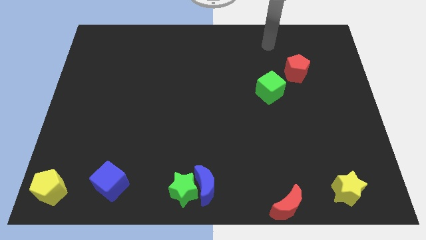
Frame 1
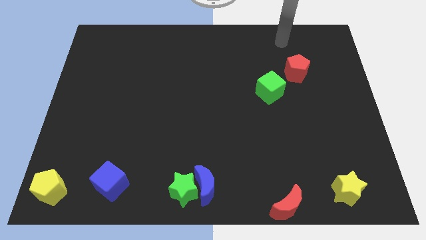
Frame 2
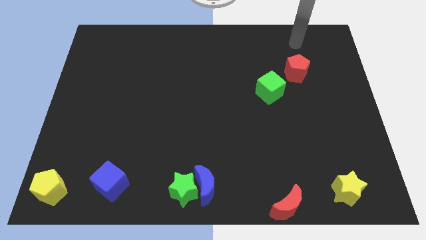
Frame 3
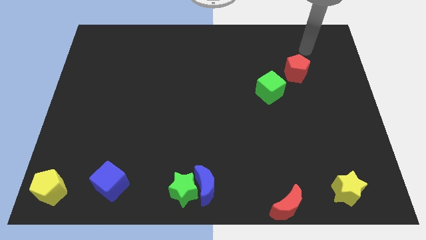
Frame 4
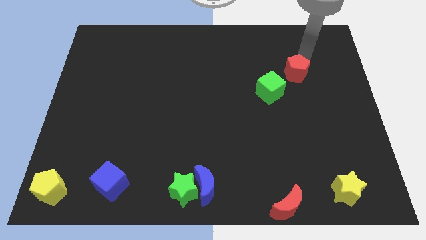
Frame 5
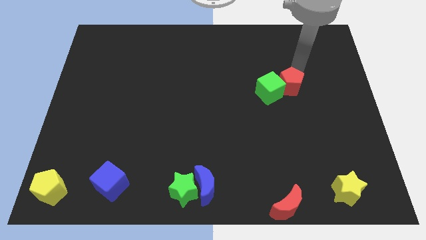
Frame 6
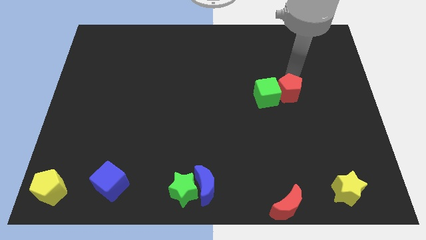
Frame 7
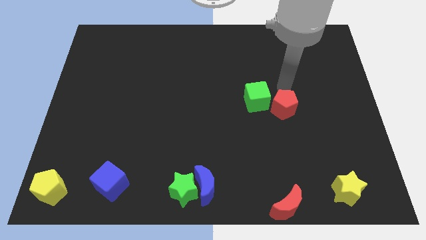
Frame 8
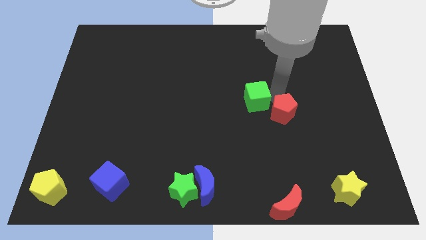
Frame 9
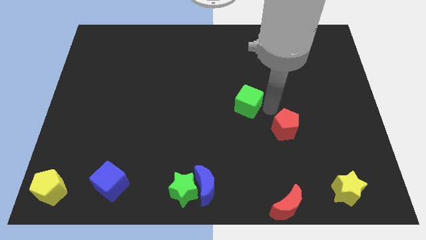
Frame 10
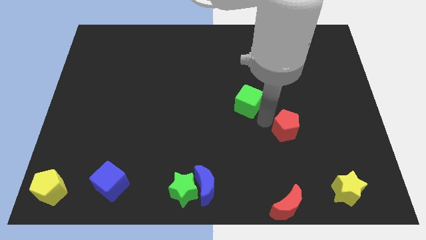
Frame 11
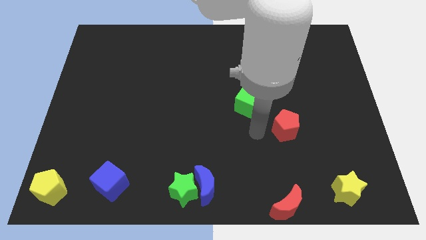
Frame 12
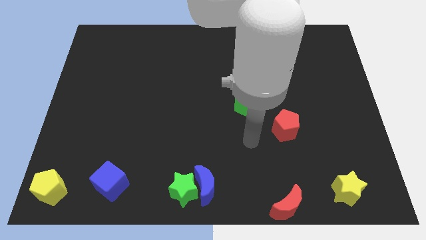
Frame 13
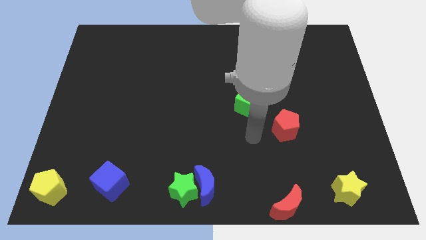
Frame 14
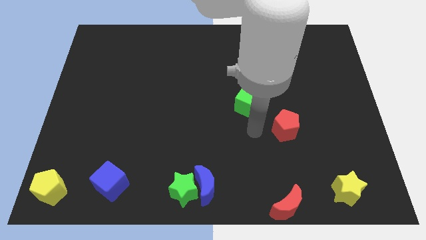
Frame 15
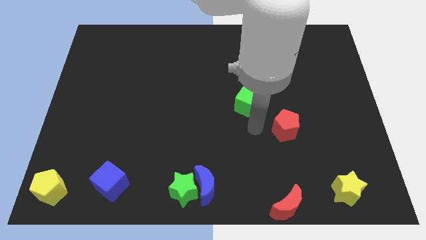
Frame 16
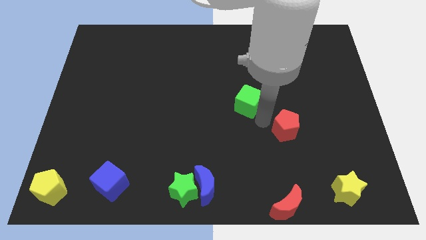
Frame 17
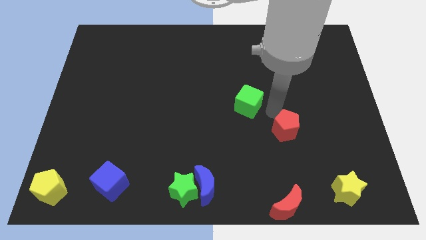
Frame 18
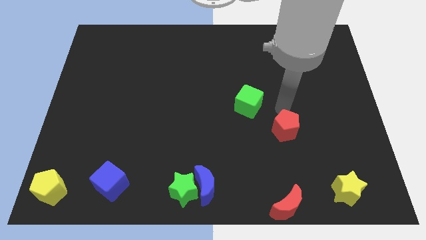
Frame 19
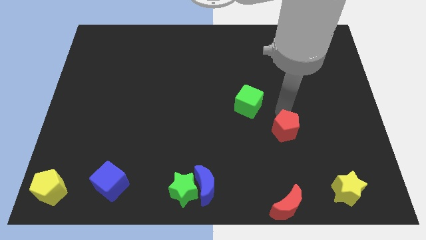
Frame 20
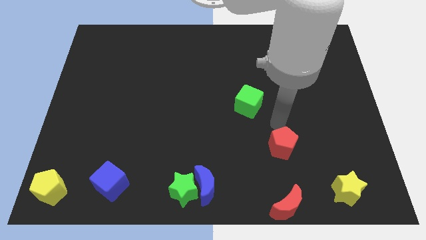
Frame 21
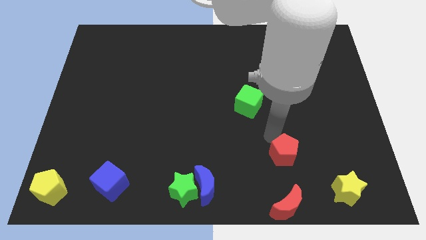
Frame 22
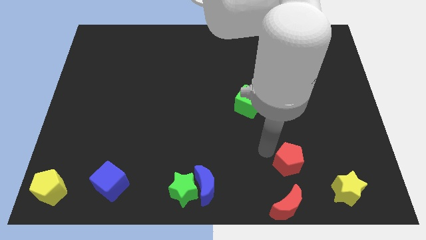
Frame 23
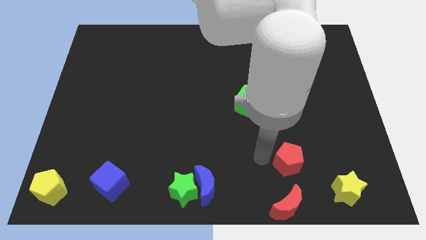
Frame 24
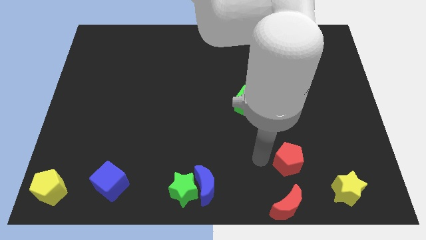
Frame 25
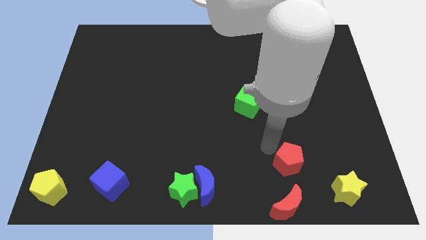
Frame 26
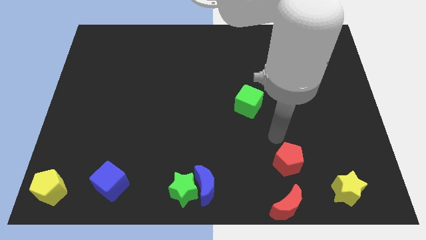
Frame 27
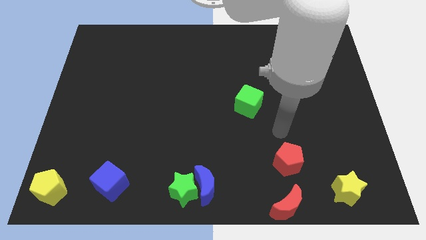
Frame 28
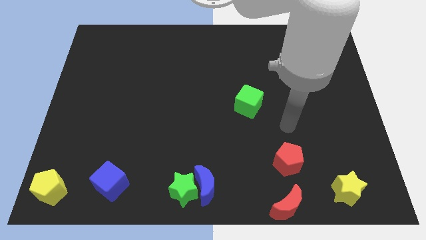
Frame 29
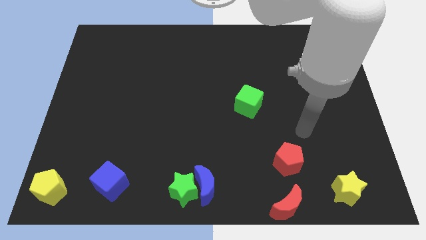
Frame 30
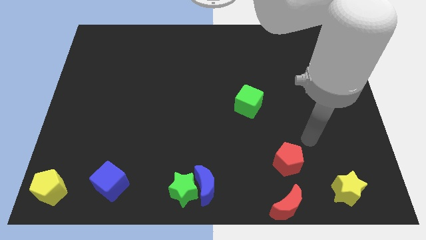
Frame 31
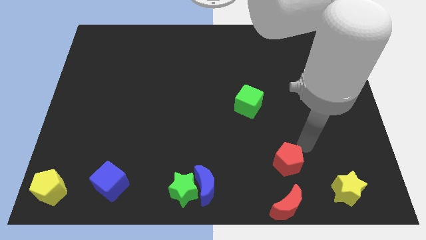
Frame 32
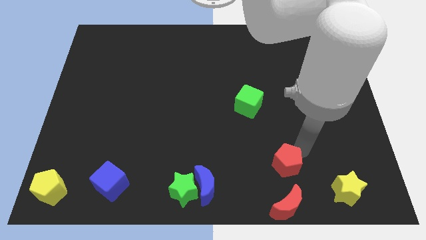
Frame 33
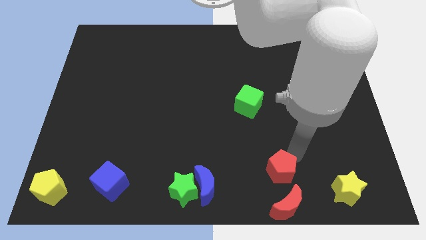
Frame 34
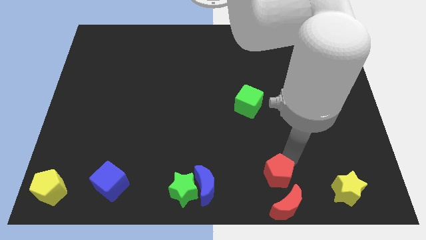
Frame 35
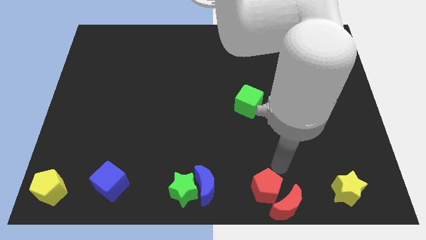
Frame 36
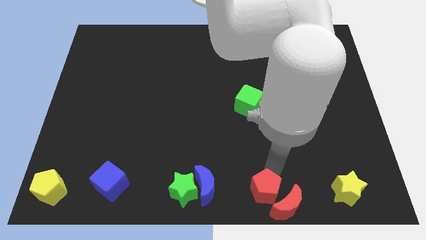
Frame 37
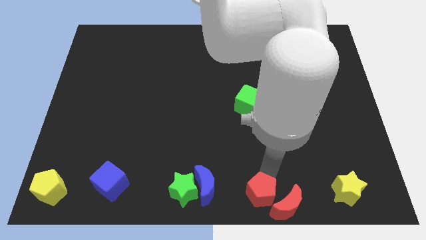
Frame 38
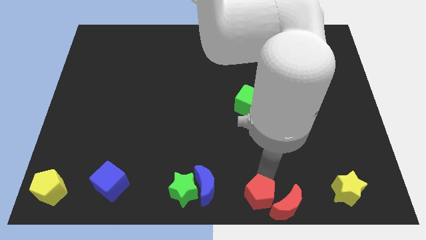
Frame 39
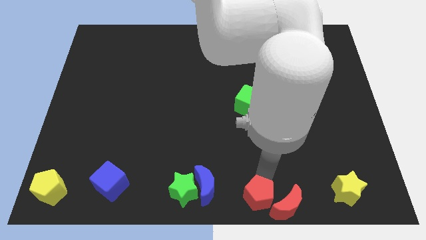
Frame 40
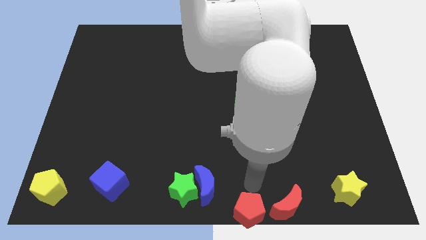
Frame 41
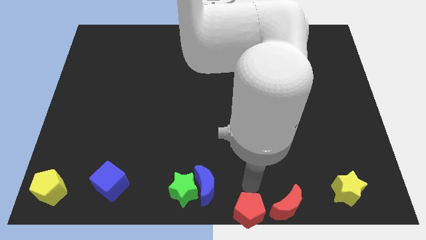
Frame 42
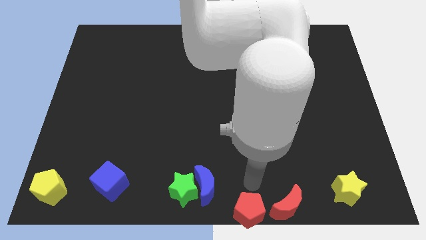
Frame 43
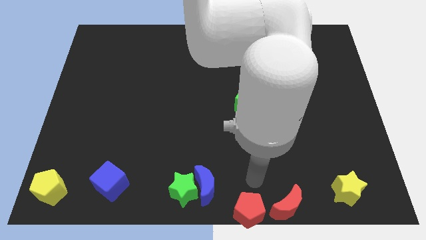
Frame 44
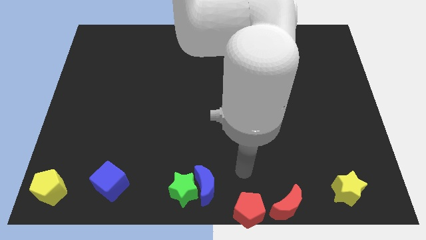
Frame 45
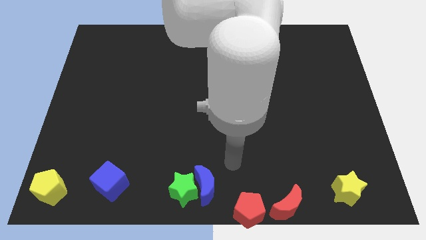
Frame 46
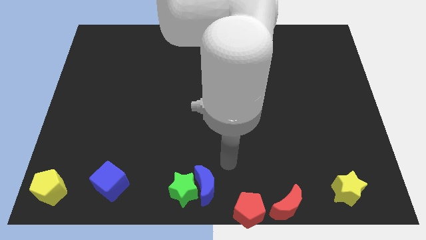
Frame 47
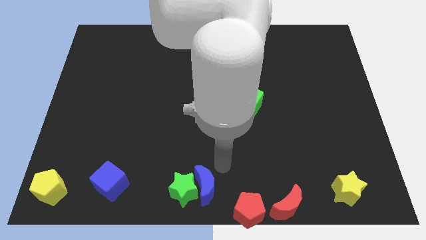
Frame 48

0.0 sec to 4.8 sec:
slide the red pentagon to the left side of the red crescent

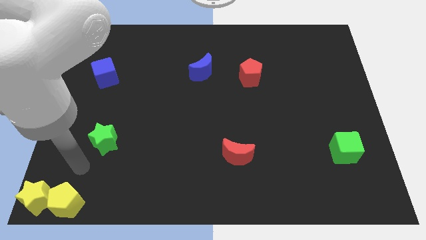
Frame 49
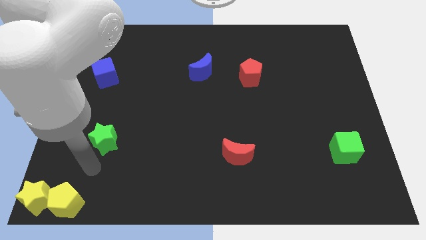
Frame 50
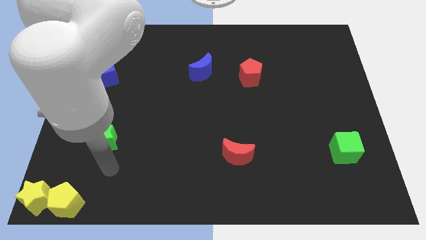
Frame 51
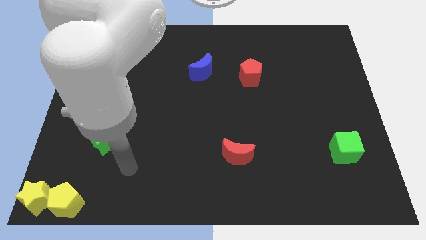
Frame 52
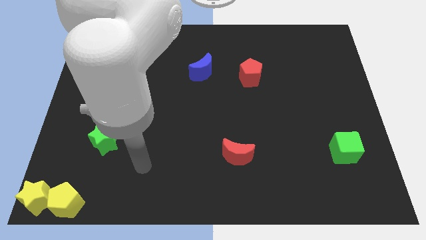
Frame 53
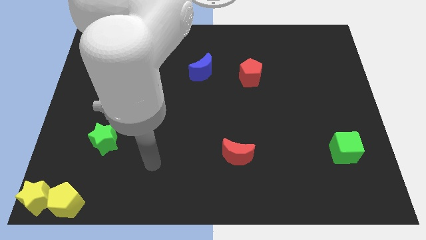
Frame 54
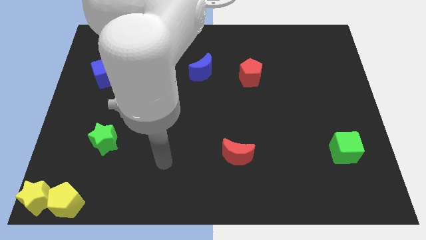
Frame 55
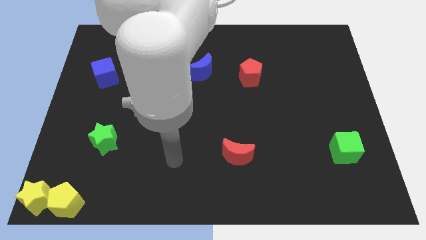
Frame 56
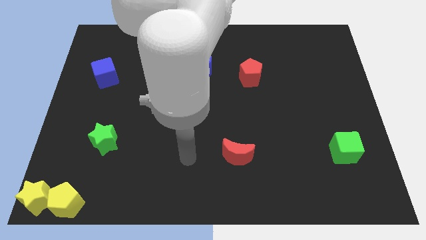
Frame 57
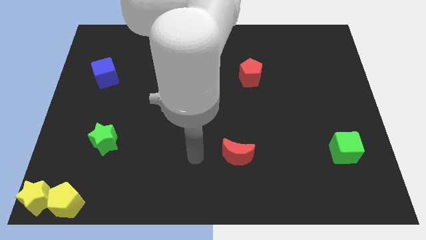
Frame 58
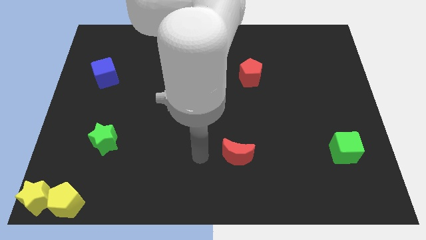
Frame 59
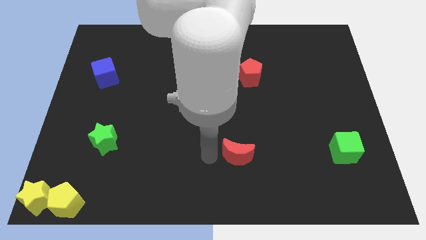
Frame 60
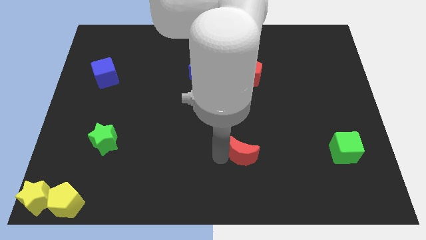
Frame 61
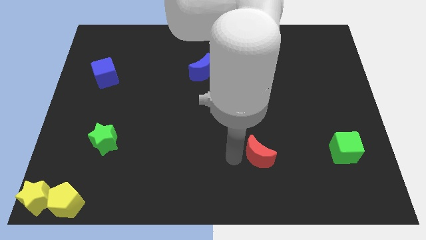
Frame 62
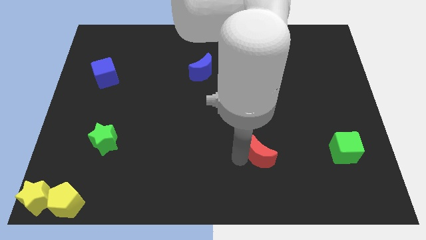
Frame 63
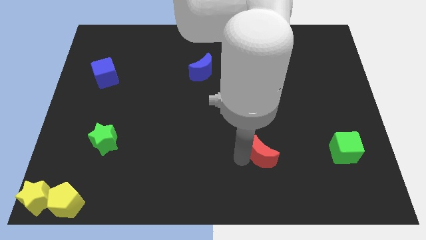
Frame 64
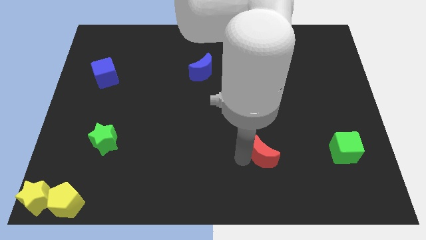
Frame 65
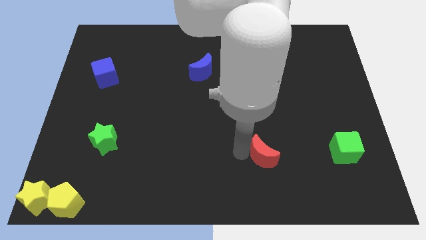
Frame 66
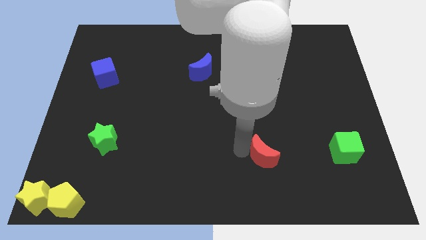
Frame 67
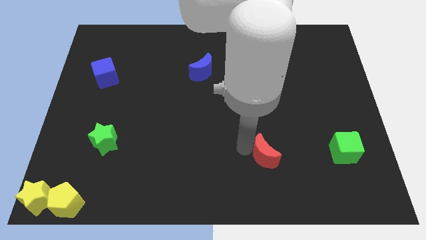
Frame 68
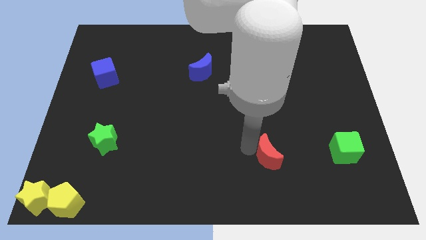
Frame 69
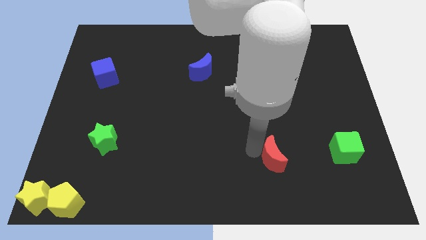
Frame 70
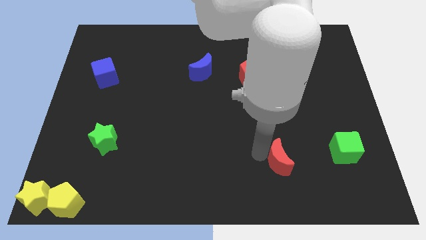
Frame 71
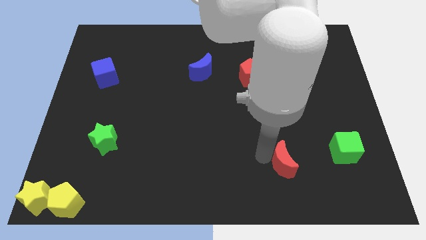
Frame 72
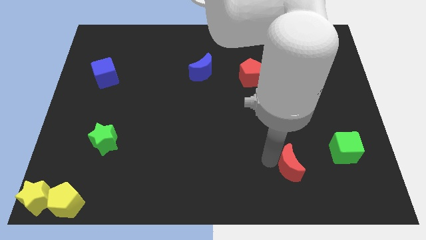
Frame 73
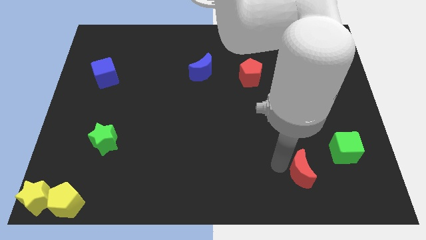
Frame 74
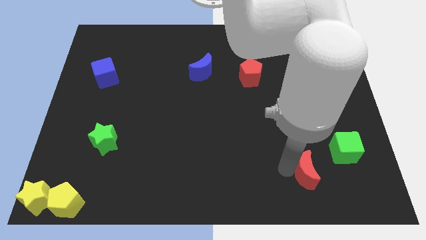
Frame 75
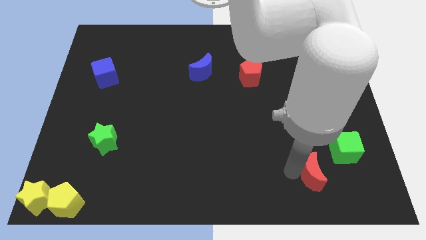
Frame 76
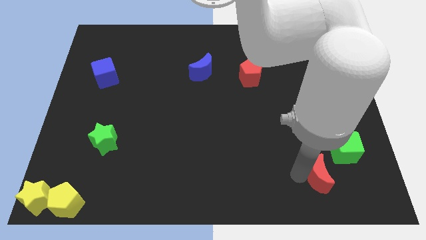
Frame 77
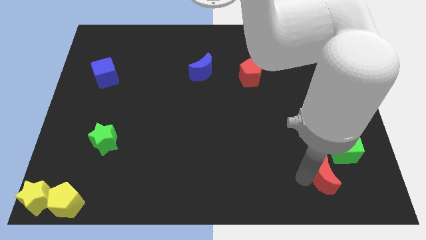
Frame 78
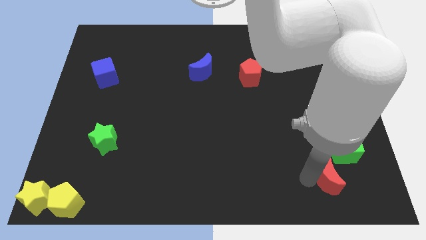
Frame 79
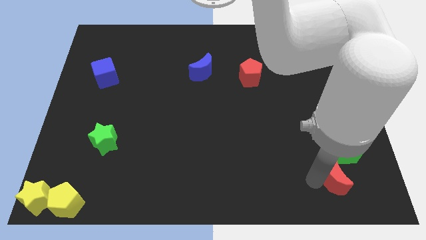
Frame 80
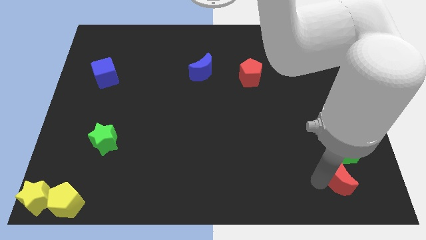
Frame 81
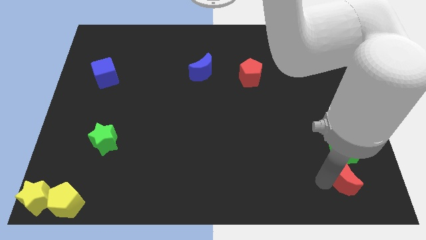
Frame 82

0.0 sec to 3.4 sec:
move the red moon towards the bottom of the green cube

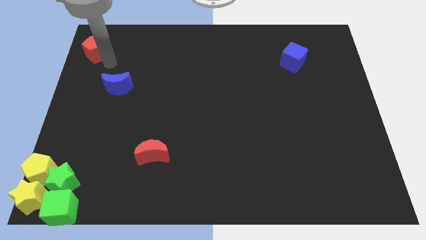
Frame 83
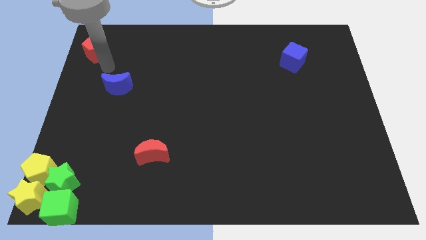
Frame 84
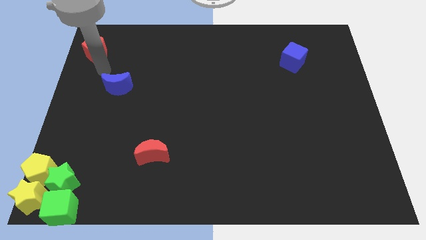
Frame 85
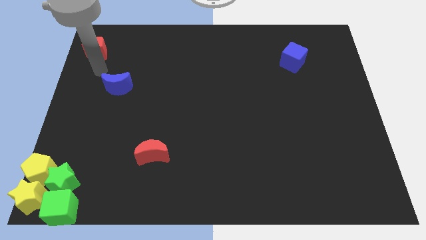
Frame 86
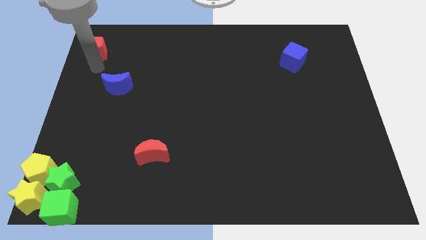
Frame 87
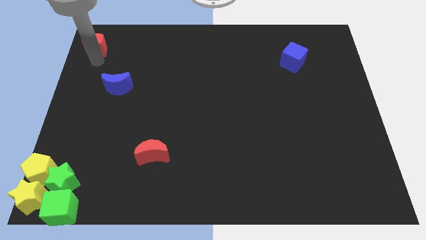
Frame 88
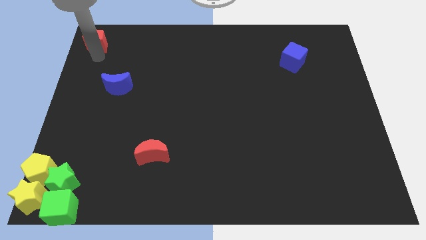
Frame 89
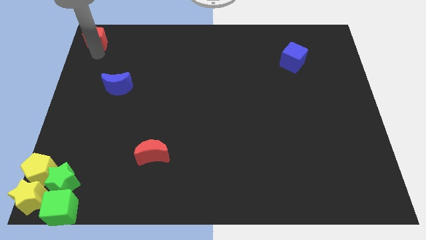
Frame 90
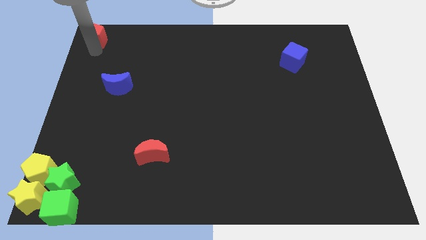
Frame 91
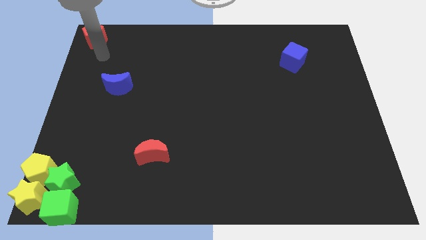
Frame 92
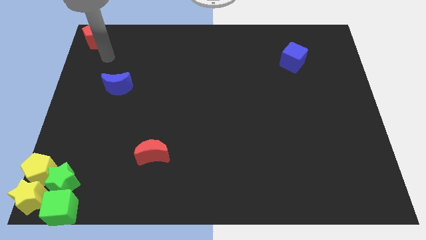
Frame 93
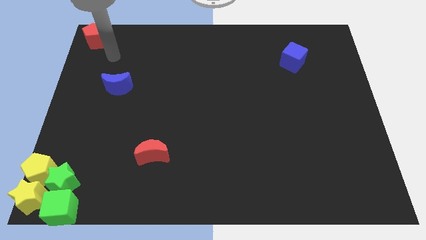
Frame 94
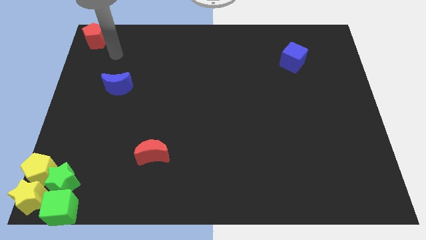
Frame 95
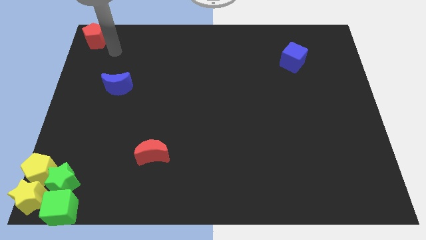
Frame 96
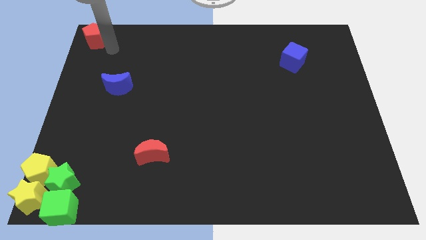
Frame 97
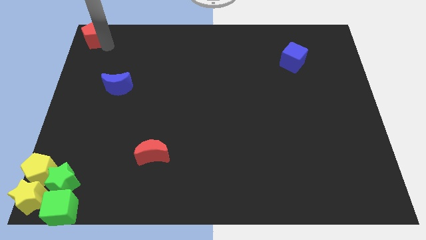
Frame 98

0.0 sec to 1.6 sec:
push the red pentagon to the top left of the board
